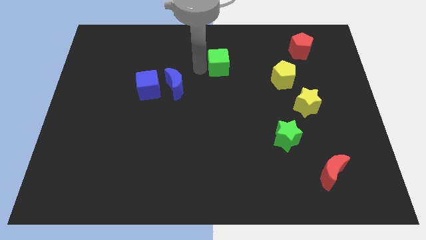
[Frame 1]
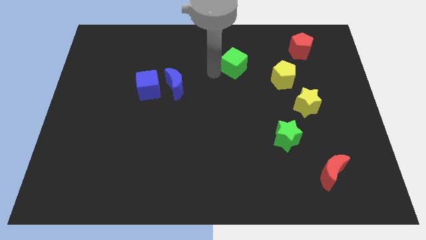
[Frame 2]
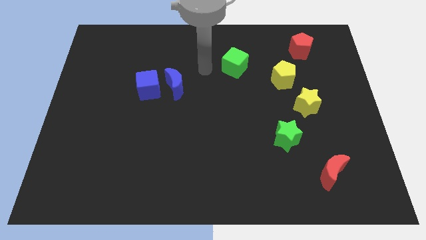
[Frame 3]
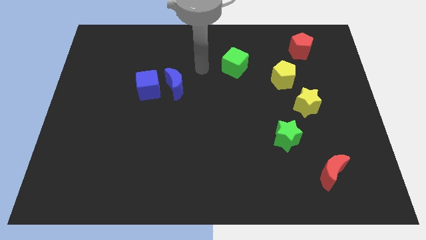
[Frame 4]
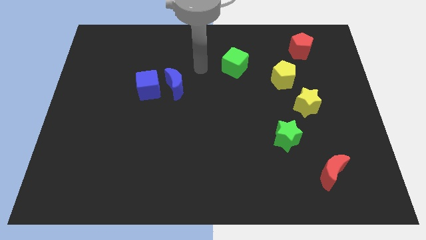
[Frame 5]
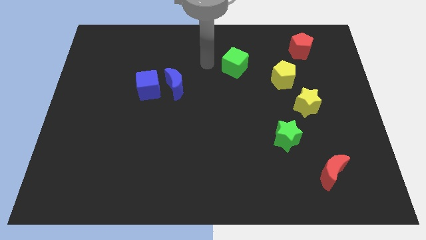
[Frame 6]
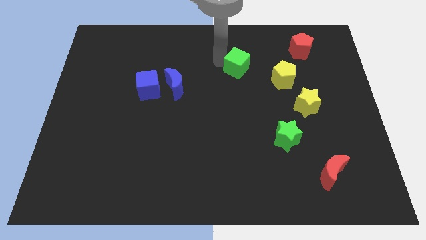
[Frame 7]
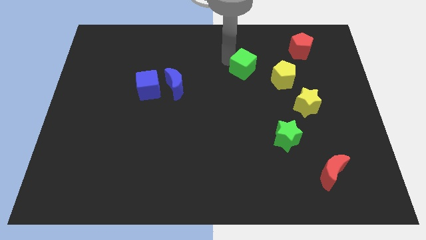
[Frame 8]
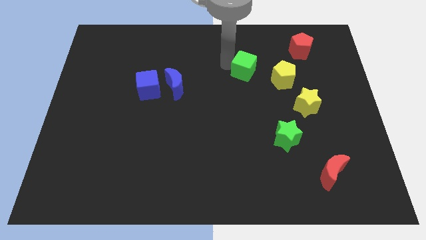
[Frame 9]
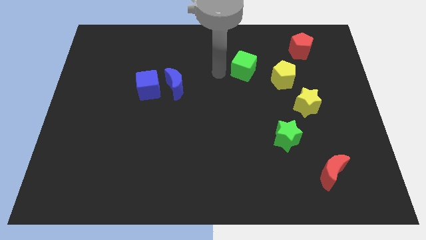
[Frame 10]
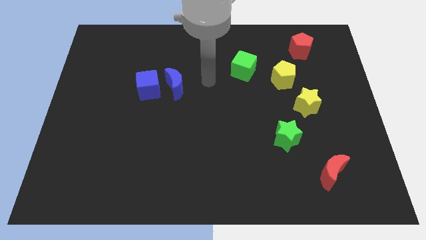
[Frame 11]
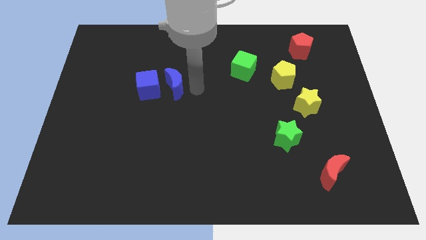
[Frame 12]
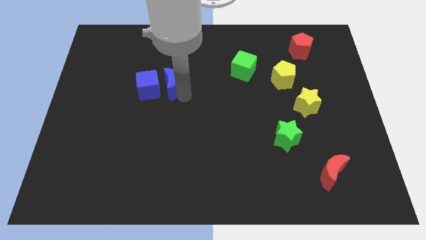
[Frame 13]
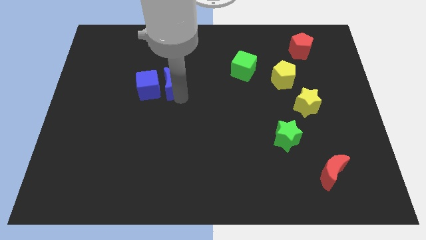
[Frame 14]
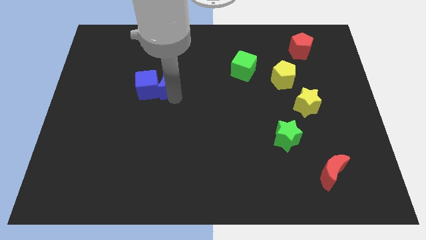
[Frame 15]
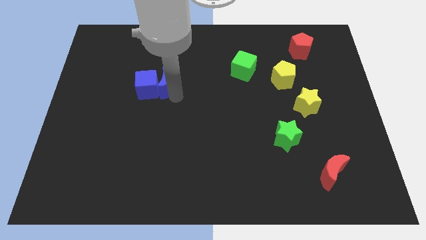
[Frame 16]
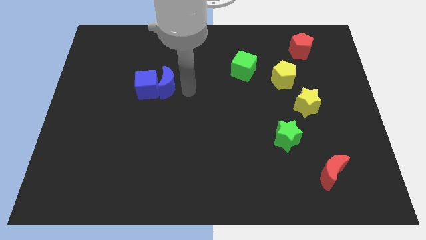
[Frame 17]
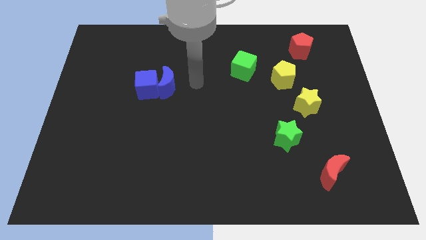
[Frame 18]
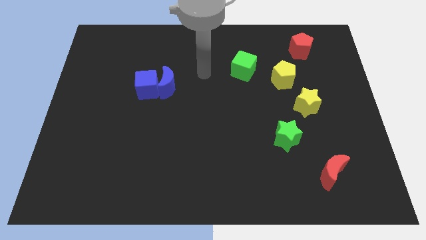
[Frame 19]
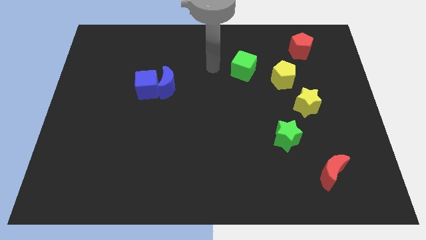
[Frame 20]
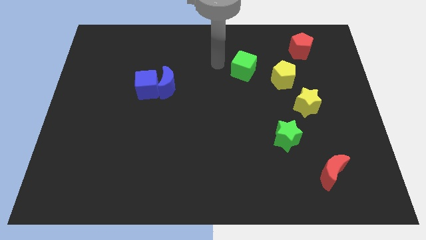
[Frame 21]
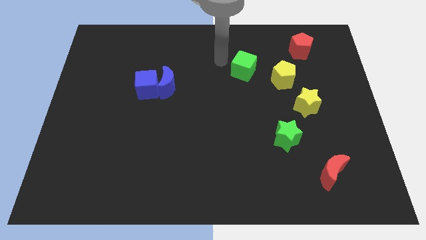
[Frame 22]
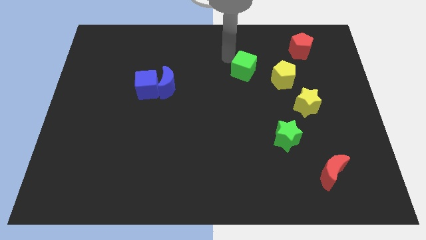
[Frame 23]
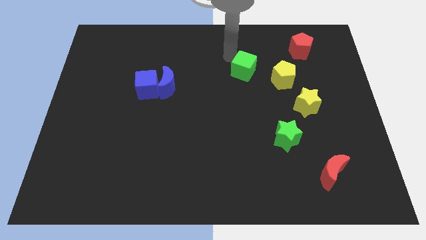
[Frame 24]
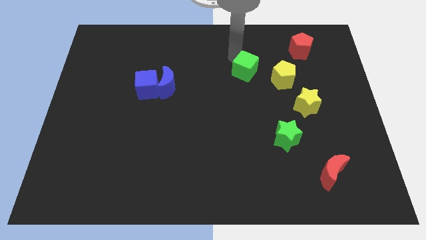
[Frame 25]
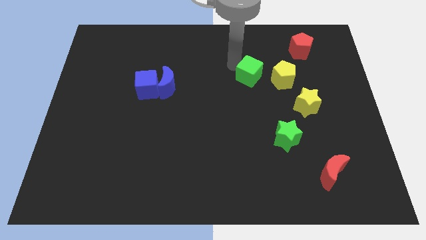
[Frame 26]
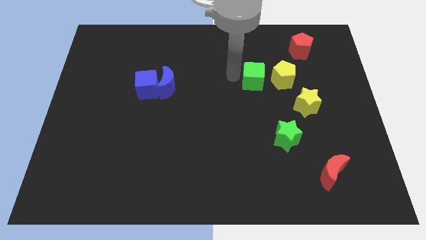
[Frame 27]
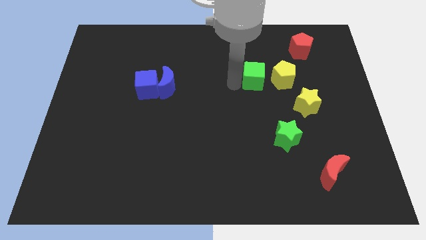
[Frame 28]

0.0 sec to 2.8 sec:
move the green cube to the left side of the yellow pentagon

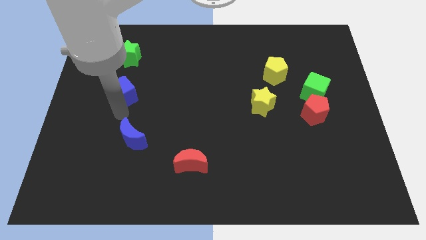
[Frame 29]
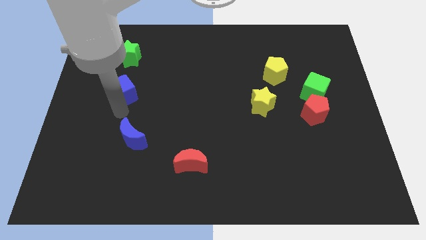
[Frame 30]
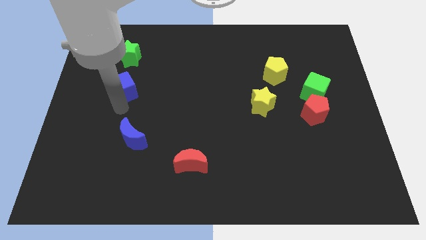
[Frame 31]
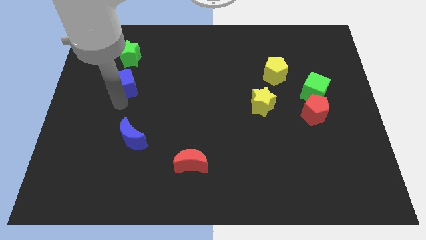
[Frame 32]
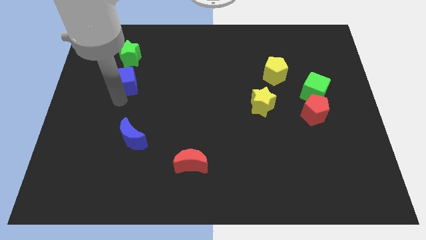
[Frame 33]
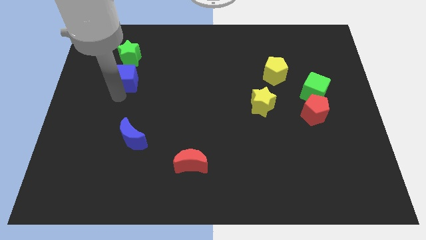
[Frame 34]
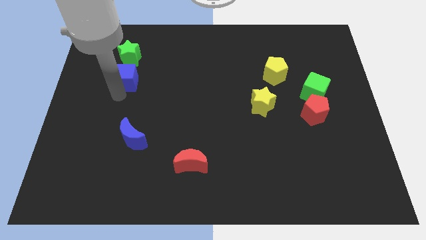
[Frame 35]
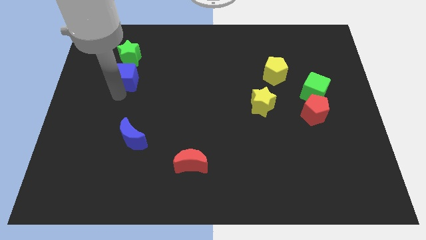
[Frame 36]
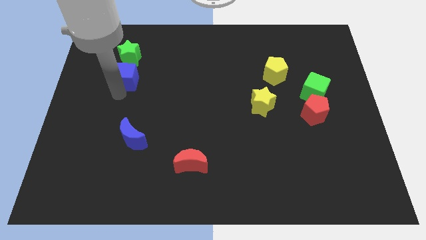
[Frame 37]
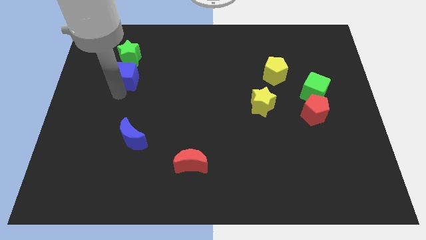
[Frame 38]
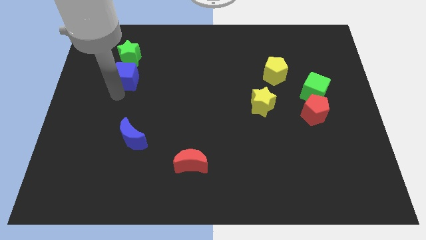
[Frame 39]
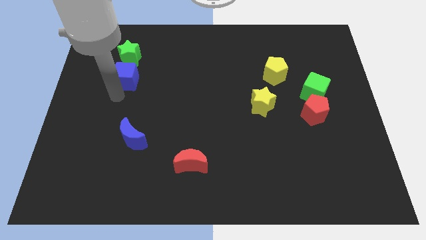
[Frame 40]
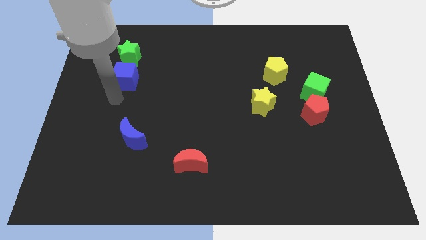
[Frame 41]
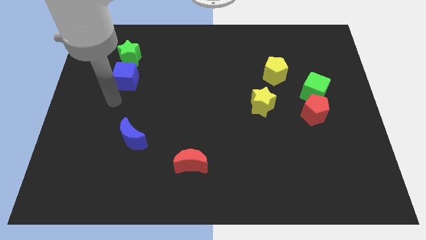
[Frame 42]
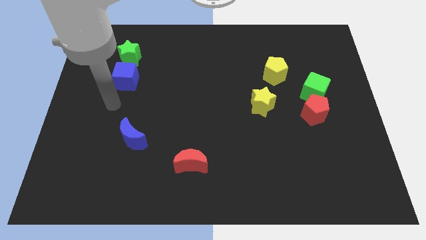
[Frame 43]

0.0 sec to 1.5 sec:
push the blue cube into the green star

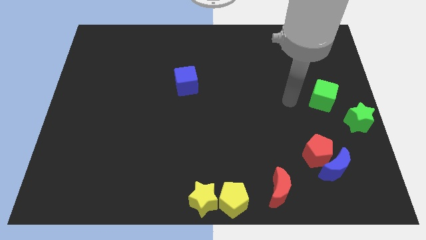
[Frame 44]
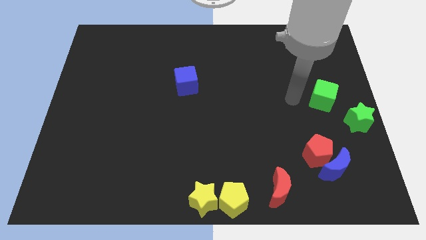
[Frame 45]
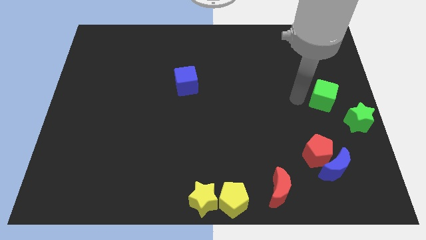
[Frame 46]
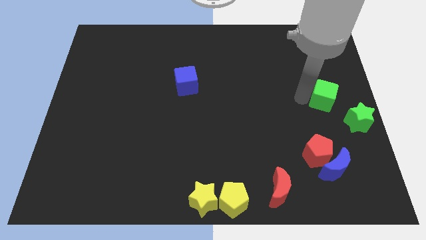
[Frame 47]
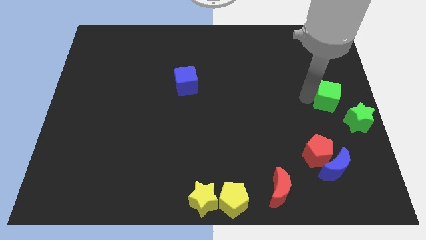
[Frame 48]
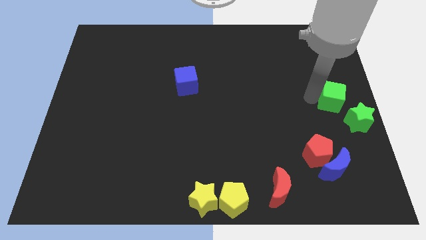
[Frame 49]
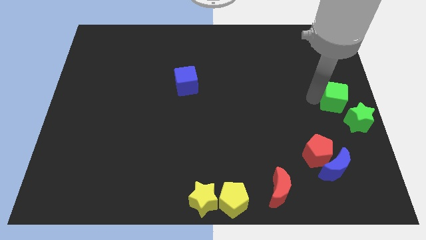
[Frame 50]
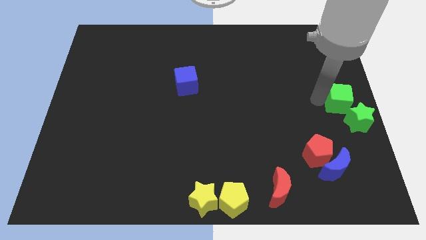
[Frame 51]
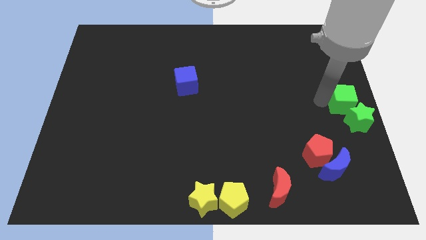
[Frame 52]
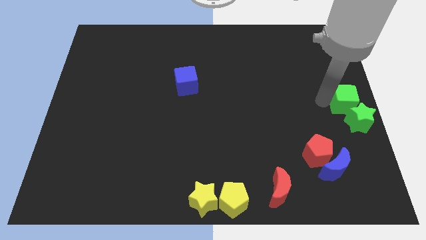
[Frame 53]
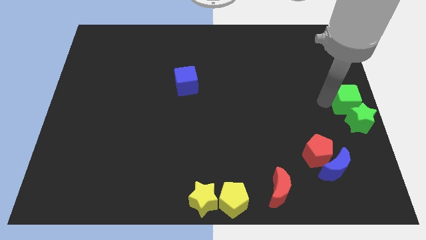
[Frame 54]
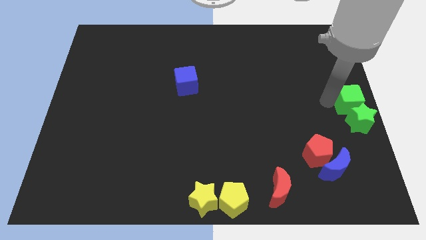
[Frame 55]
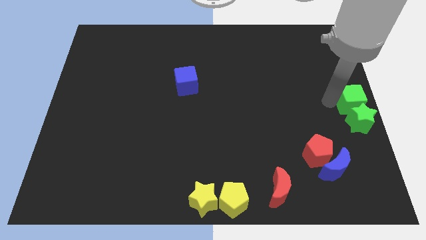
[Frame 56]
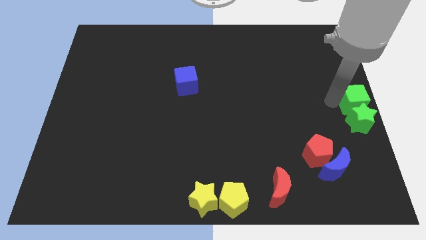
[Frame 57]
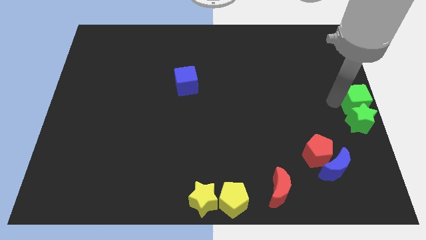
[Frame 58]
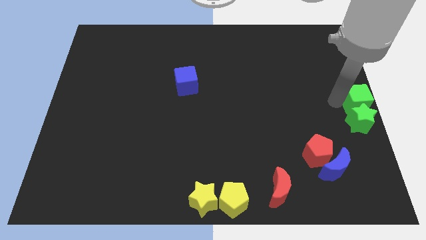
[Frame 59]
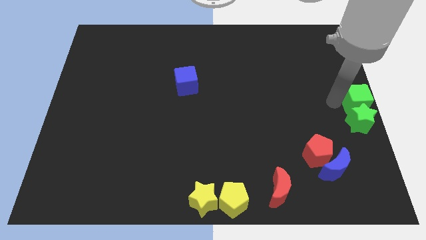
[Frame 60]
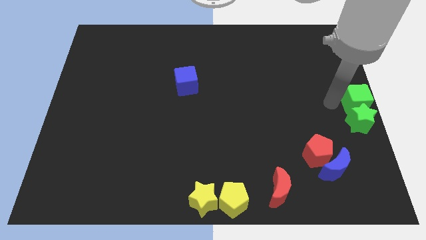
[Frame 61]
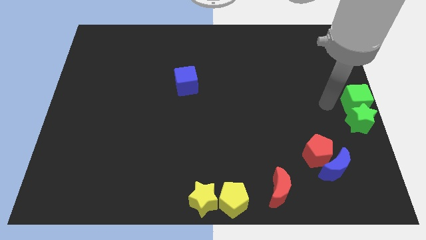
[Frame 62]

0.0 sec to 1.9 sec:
place the green cube on top of the green star

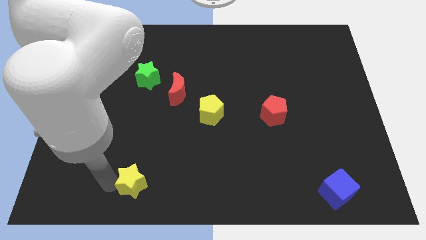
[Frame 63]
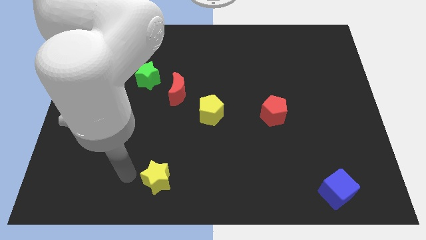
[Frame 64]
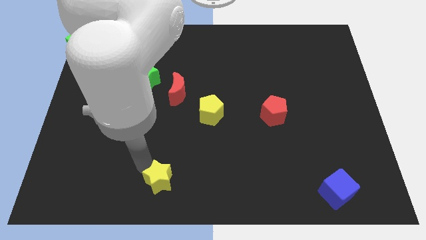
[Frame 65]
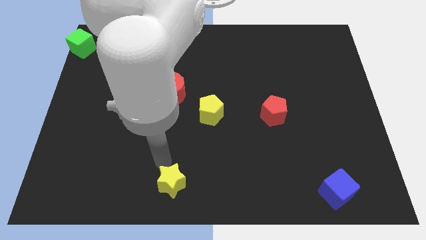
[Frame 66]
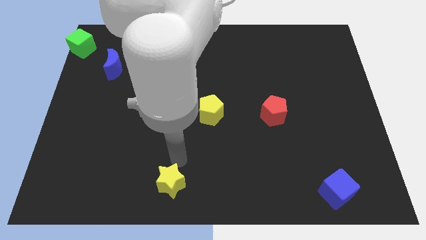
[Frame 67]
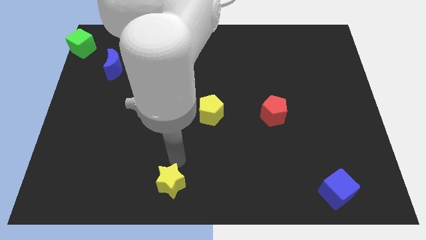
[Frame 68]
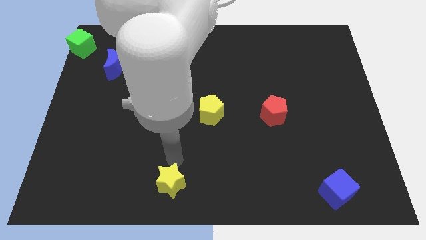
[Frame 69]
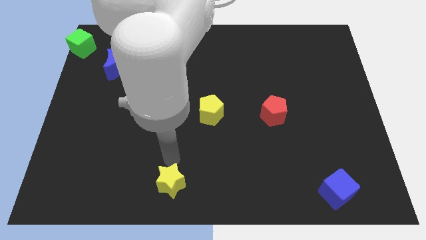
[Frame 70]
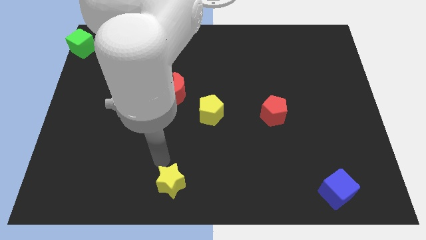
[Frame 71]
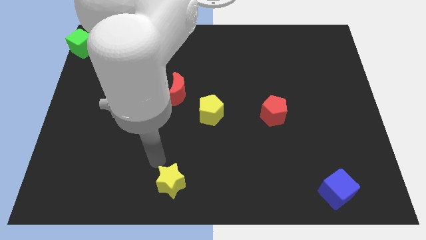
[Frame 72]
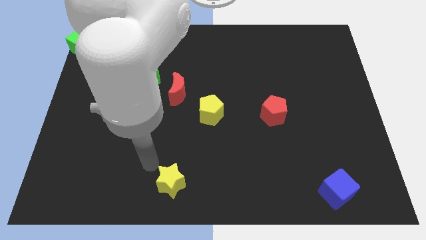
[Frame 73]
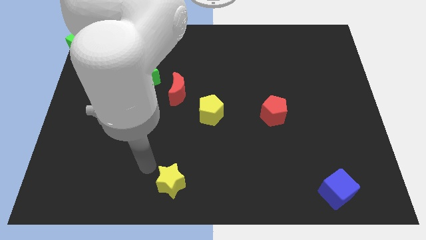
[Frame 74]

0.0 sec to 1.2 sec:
push the yellow star slightly right side

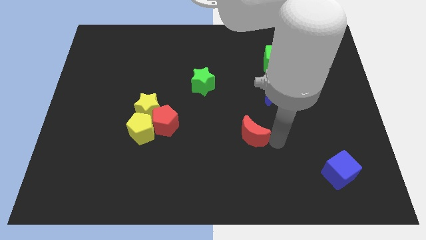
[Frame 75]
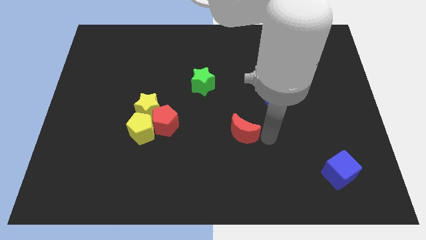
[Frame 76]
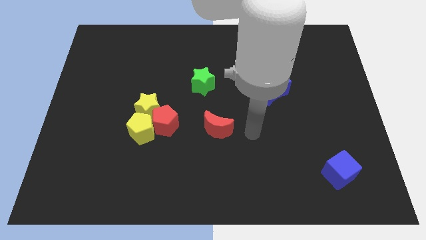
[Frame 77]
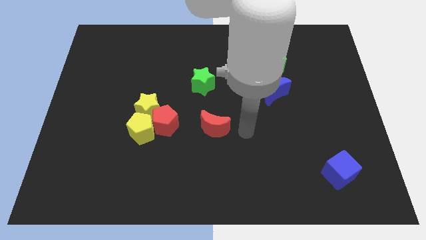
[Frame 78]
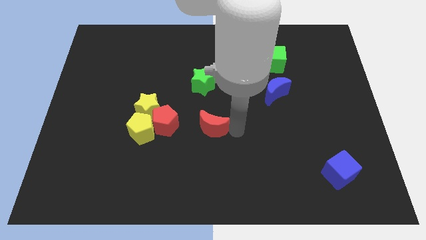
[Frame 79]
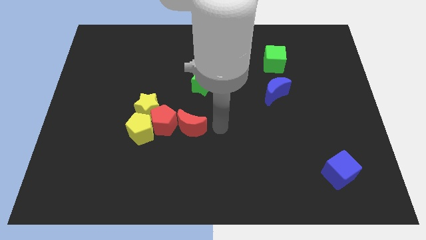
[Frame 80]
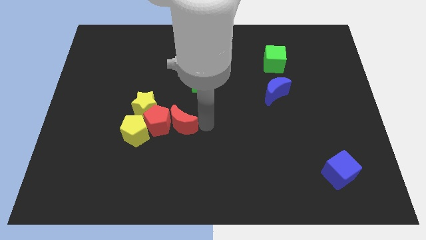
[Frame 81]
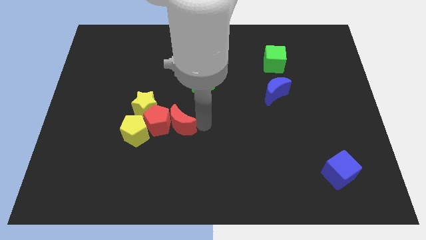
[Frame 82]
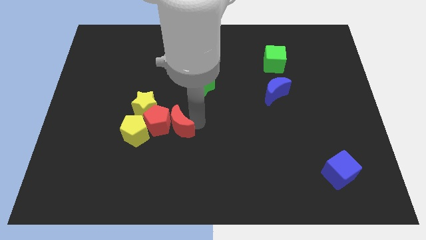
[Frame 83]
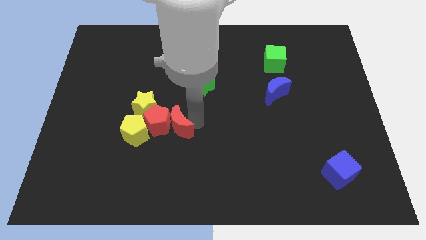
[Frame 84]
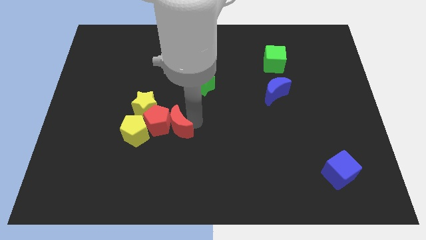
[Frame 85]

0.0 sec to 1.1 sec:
move red moon into the red pentagon

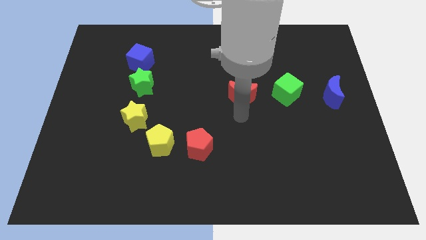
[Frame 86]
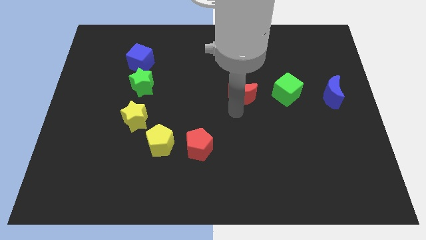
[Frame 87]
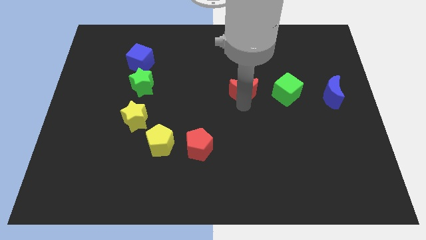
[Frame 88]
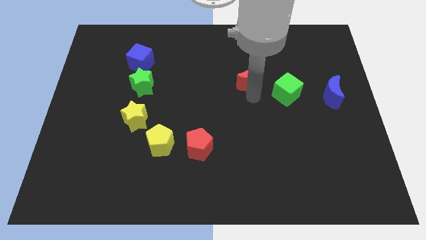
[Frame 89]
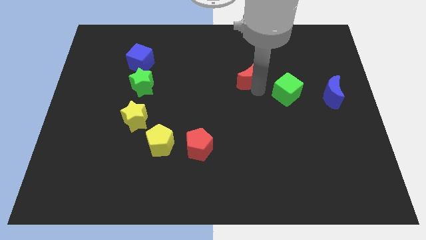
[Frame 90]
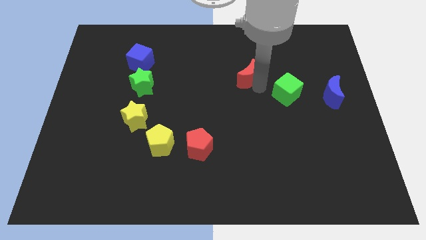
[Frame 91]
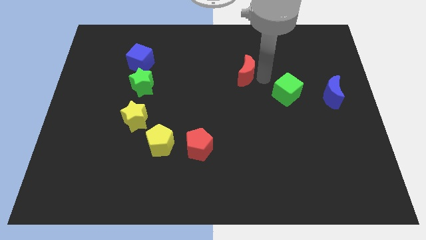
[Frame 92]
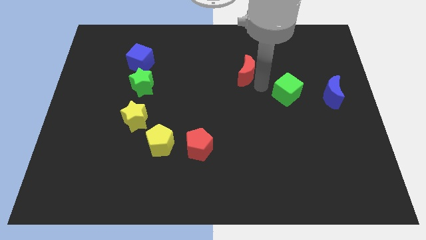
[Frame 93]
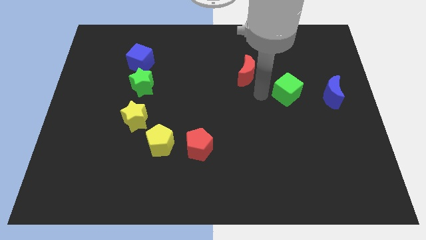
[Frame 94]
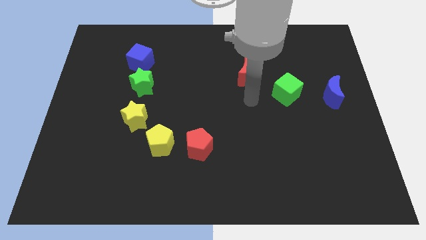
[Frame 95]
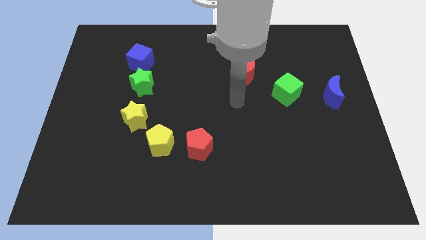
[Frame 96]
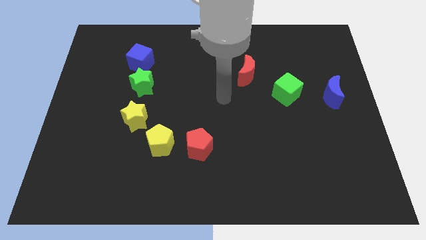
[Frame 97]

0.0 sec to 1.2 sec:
push red moon diagonally top left to the green cube
